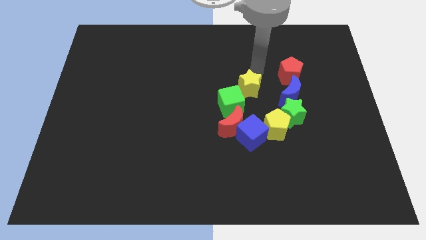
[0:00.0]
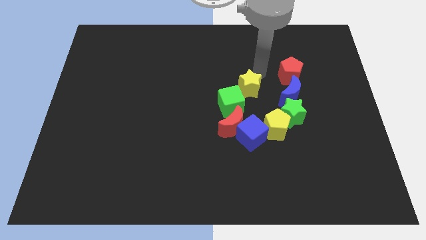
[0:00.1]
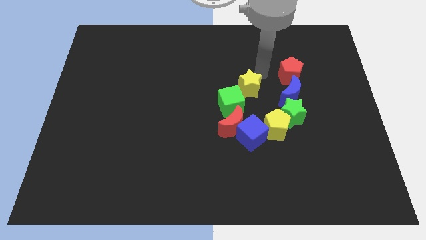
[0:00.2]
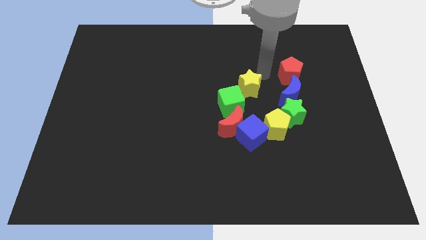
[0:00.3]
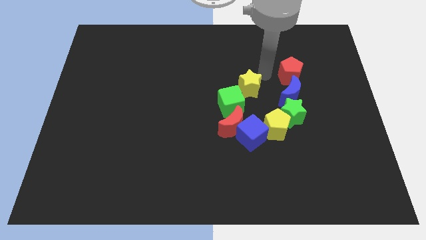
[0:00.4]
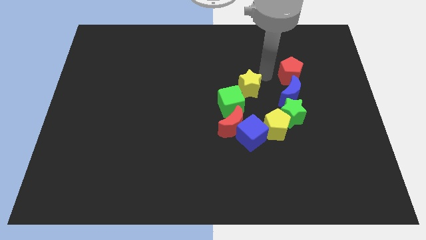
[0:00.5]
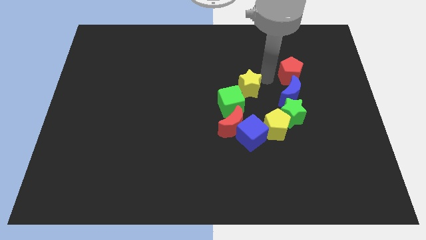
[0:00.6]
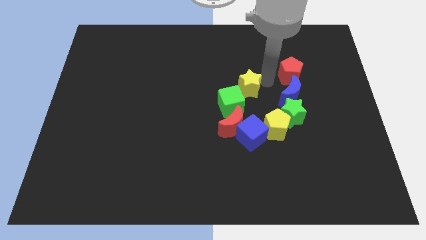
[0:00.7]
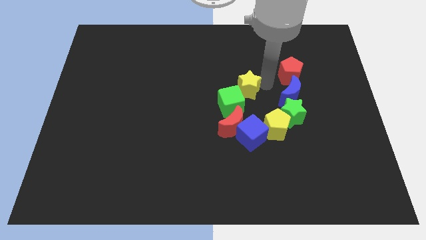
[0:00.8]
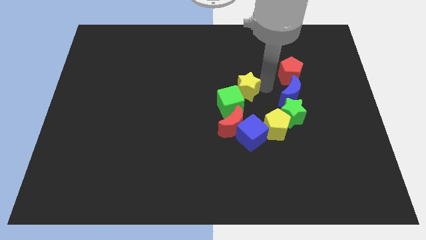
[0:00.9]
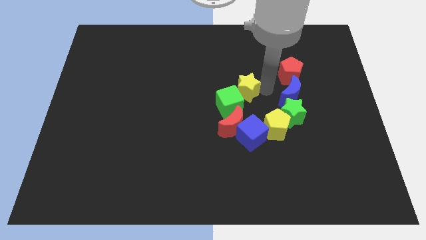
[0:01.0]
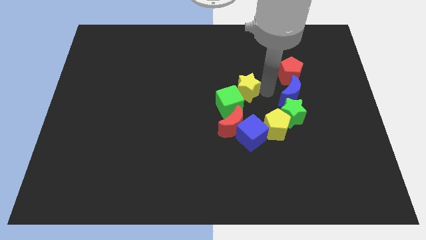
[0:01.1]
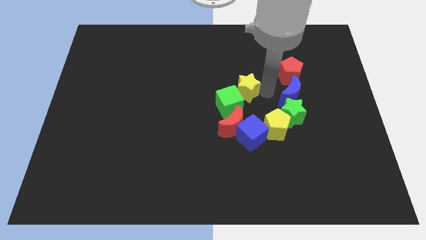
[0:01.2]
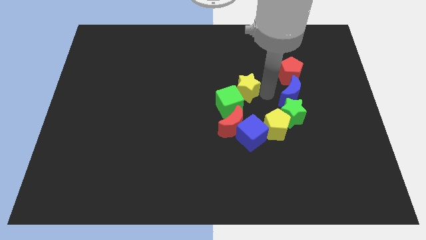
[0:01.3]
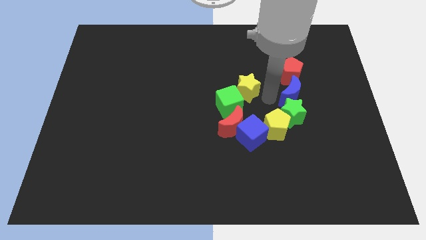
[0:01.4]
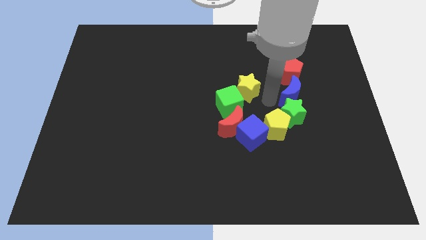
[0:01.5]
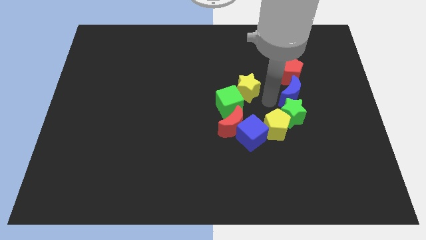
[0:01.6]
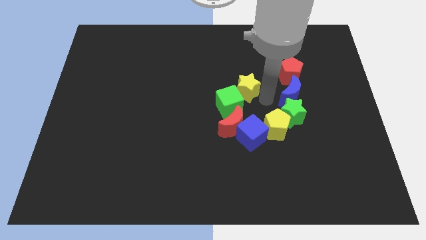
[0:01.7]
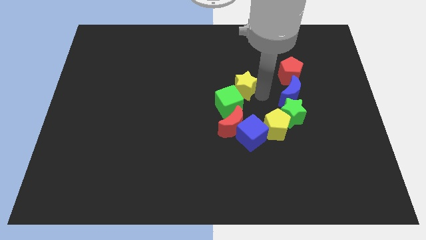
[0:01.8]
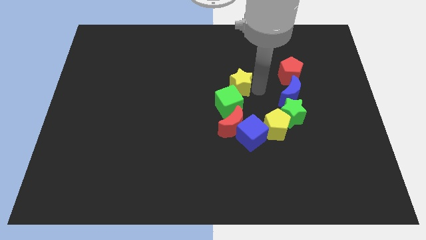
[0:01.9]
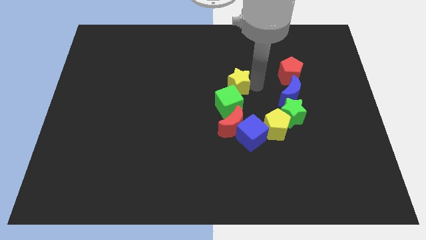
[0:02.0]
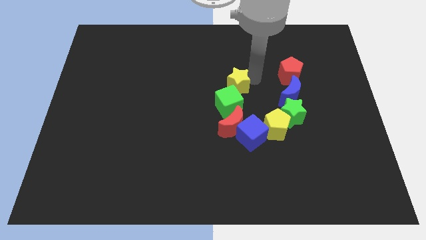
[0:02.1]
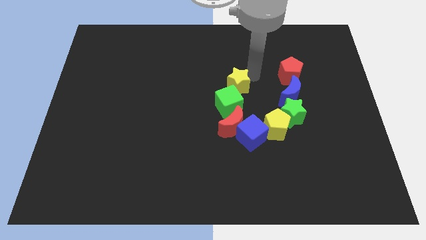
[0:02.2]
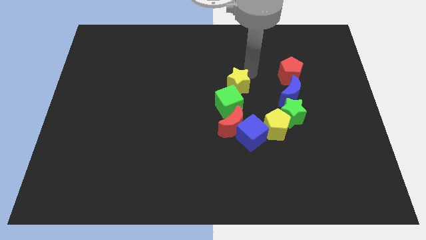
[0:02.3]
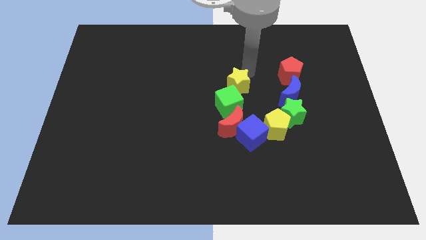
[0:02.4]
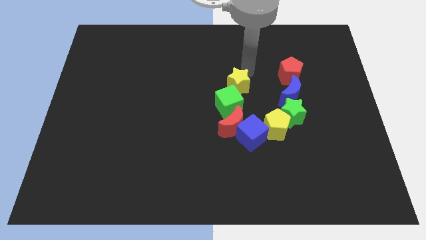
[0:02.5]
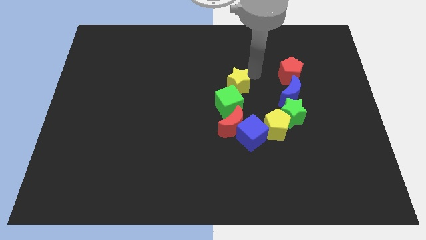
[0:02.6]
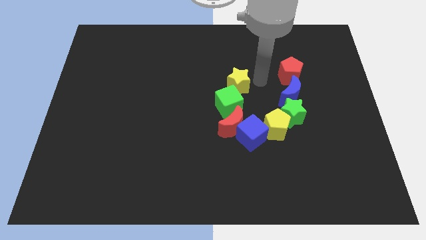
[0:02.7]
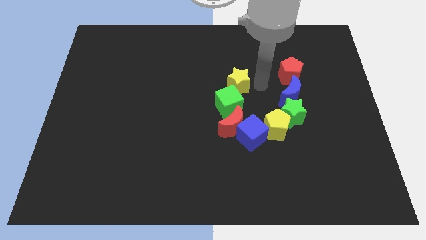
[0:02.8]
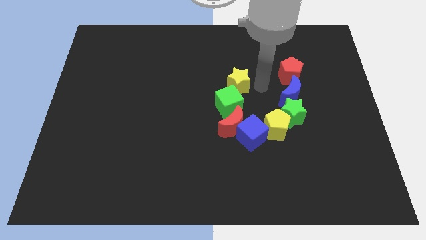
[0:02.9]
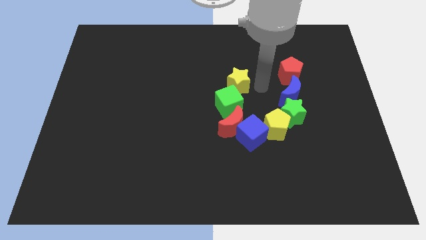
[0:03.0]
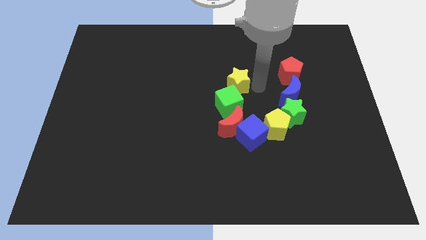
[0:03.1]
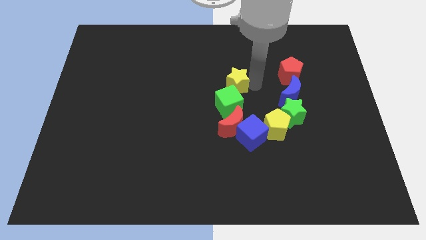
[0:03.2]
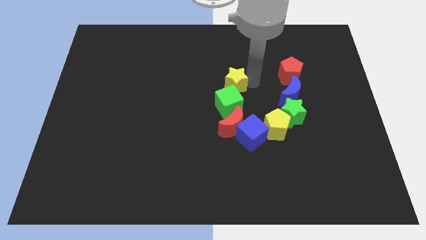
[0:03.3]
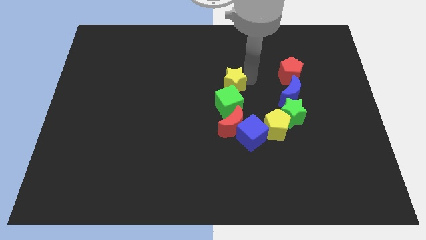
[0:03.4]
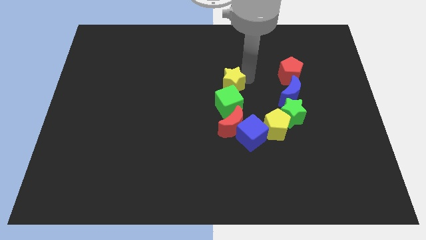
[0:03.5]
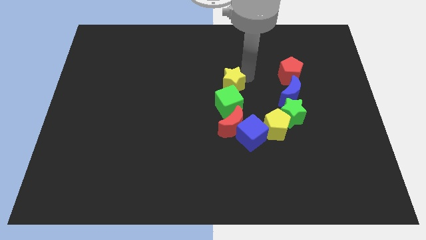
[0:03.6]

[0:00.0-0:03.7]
slightly move the yellow star to the left

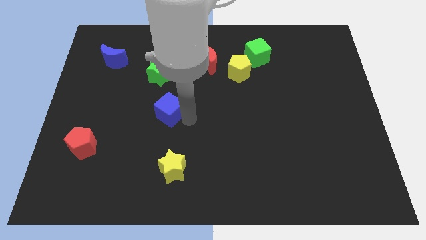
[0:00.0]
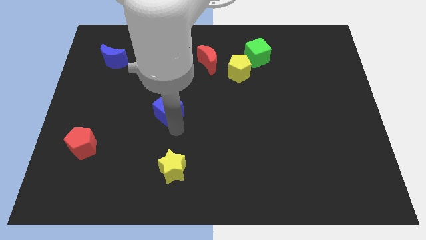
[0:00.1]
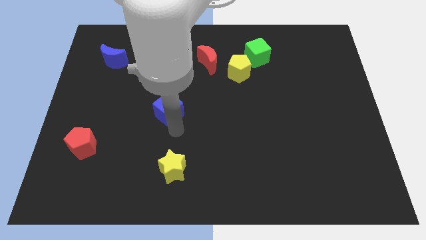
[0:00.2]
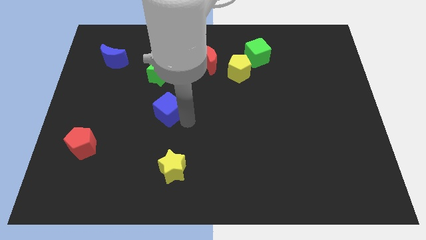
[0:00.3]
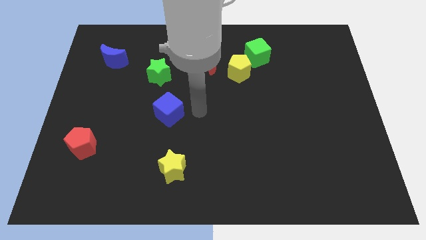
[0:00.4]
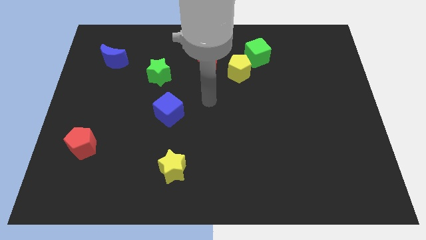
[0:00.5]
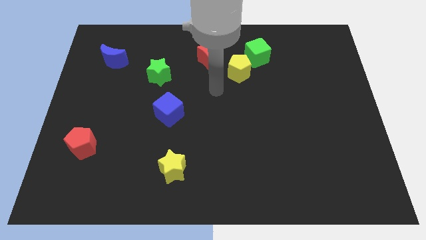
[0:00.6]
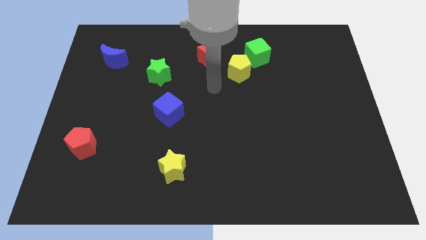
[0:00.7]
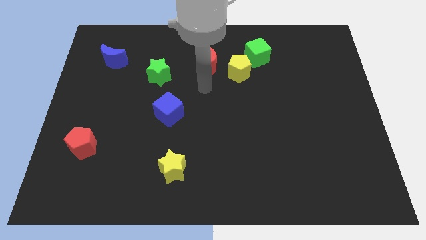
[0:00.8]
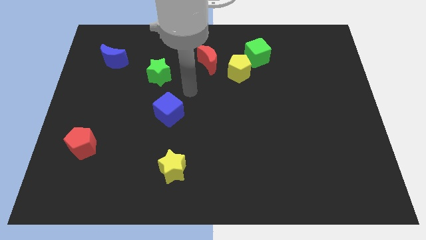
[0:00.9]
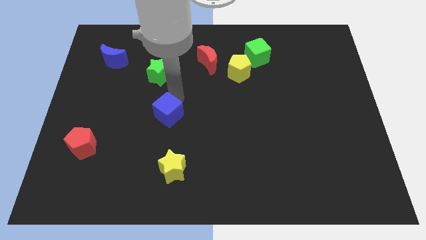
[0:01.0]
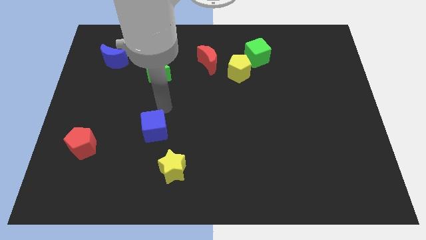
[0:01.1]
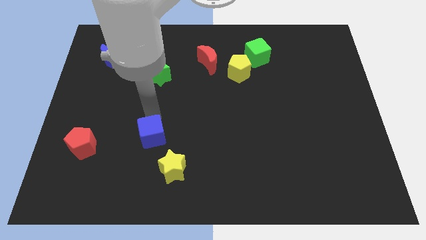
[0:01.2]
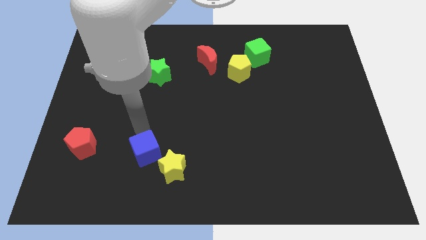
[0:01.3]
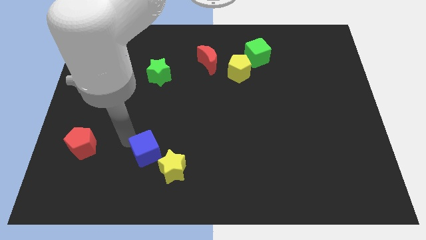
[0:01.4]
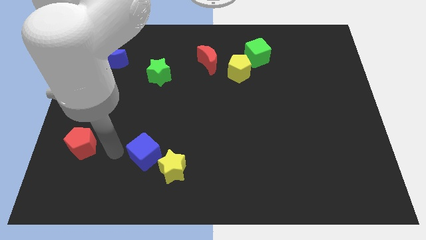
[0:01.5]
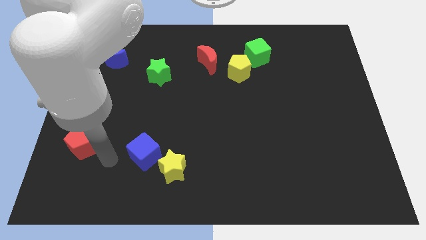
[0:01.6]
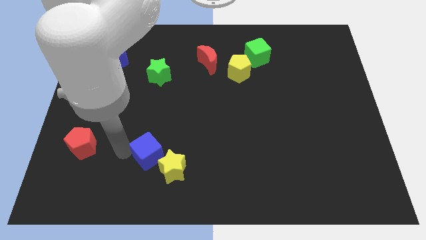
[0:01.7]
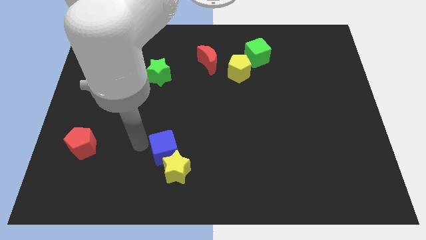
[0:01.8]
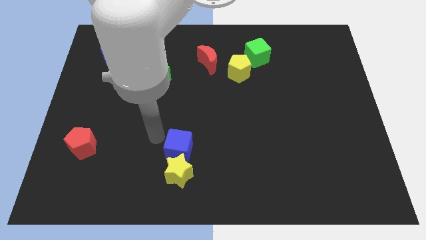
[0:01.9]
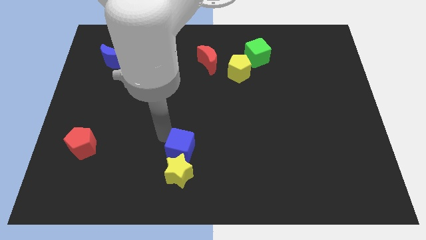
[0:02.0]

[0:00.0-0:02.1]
move the blue cube to the top side of the yellow star

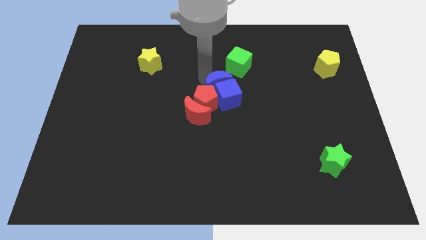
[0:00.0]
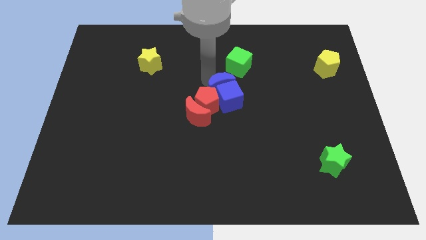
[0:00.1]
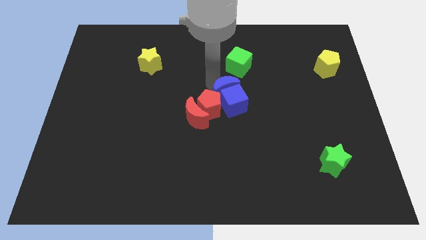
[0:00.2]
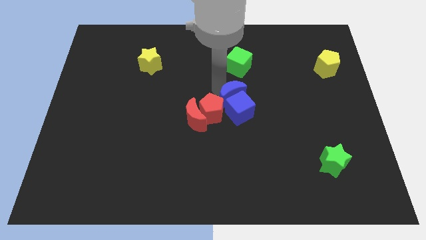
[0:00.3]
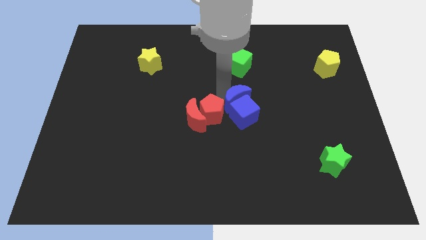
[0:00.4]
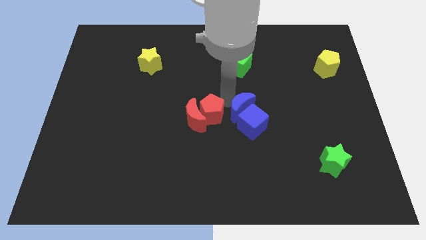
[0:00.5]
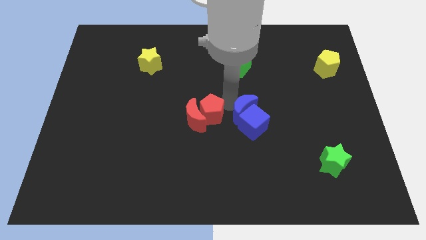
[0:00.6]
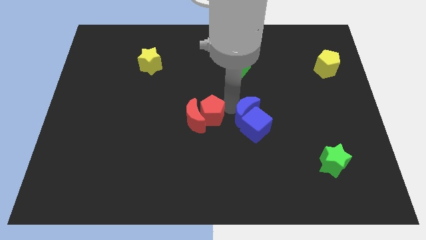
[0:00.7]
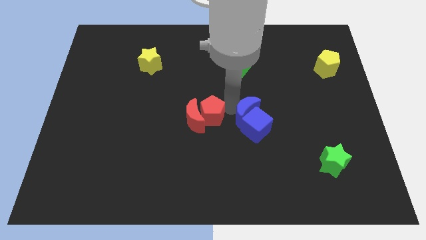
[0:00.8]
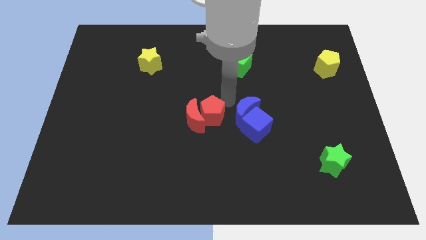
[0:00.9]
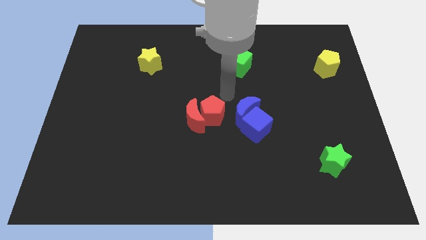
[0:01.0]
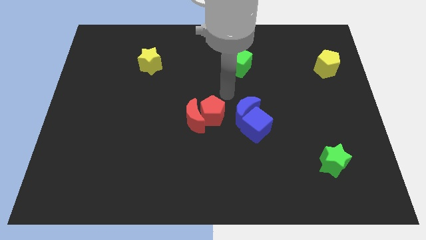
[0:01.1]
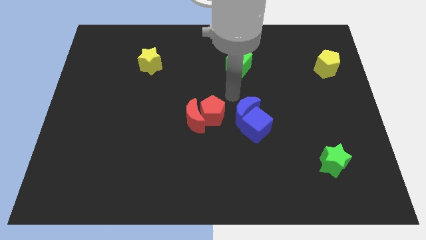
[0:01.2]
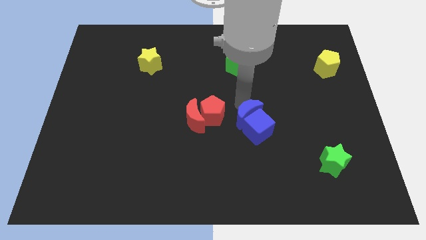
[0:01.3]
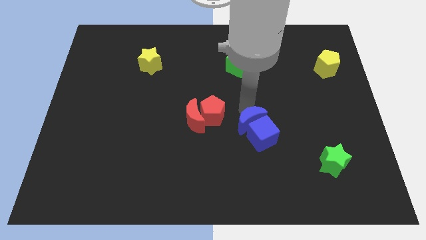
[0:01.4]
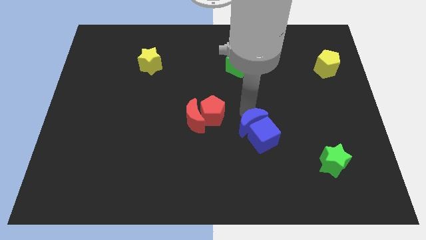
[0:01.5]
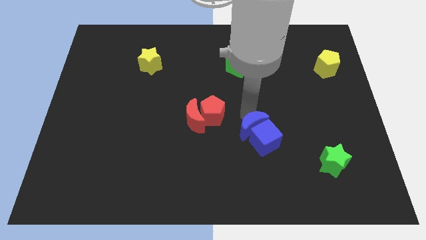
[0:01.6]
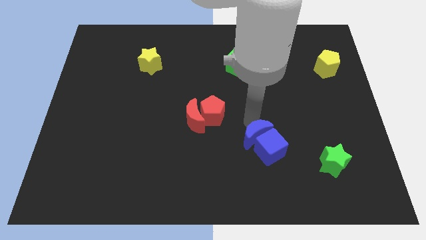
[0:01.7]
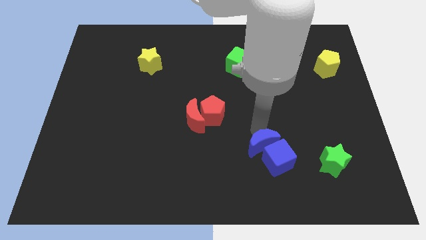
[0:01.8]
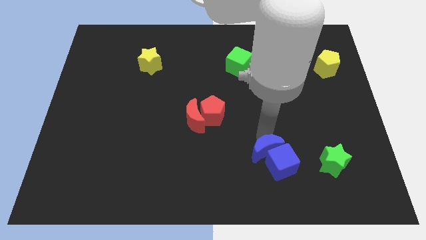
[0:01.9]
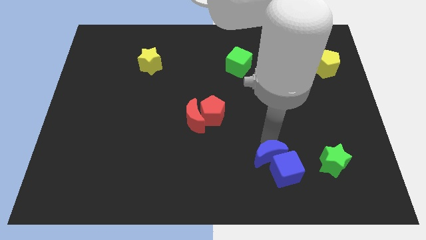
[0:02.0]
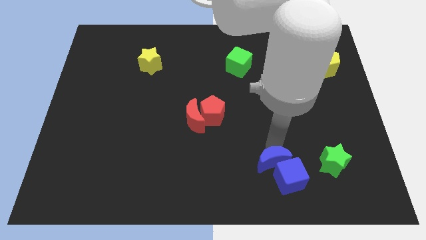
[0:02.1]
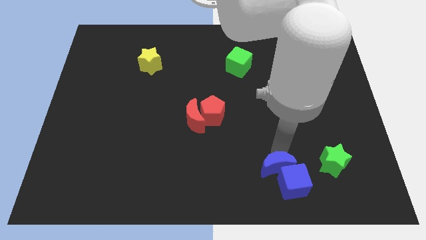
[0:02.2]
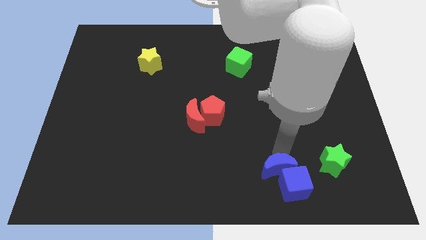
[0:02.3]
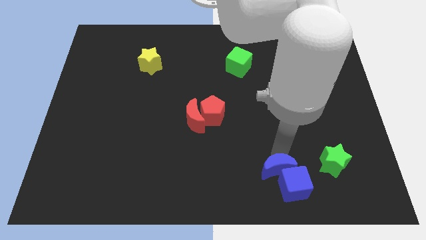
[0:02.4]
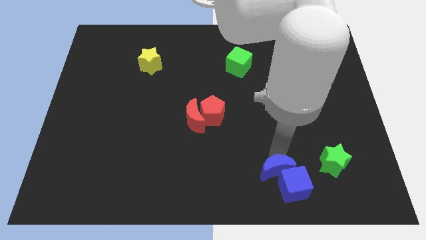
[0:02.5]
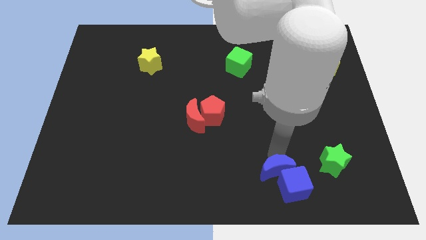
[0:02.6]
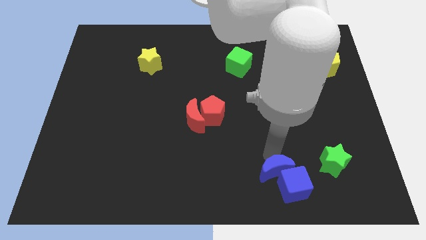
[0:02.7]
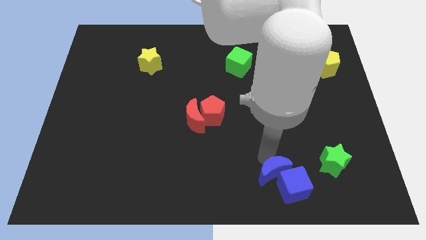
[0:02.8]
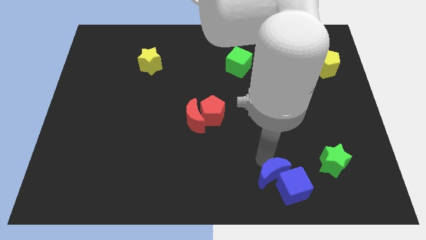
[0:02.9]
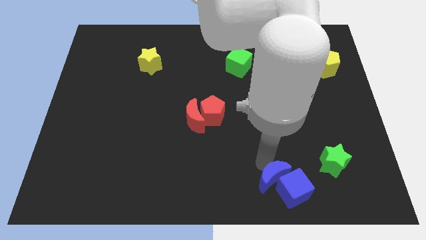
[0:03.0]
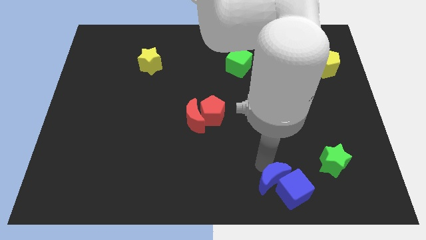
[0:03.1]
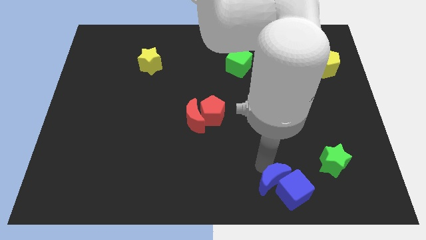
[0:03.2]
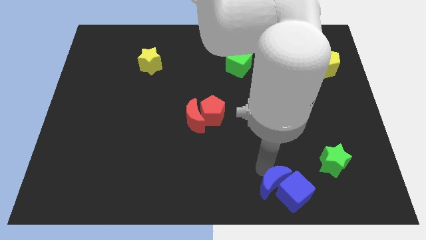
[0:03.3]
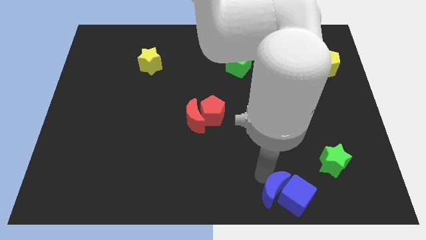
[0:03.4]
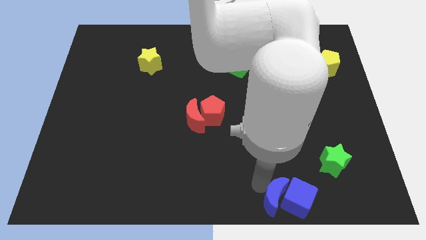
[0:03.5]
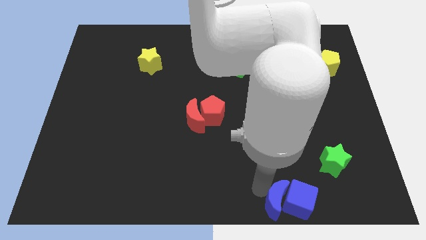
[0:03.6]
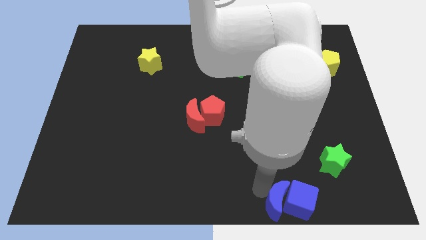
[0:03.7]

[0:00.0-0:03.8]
move the blue blocks down to the board
